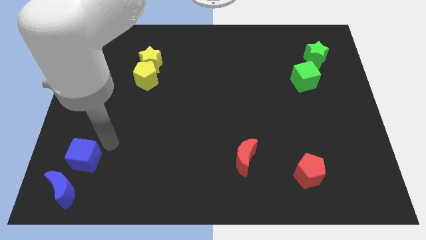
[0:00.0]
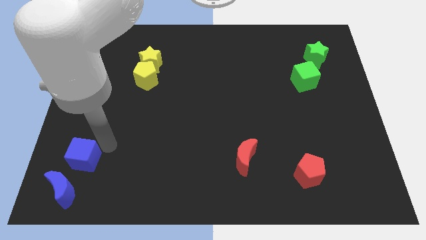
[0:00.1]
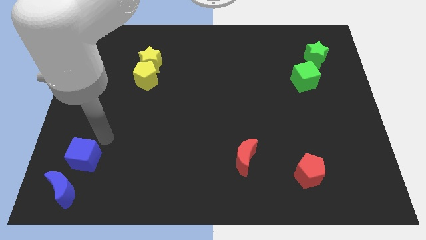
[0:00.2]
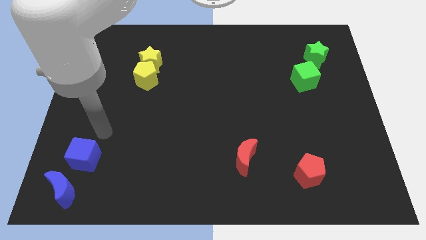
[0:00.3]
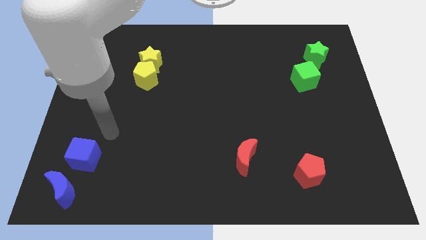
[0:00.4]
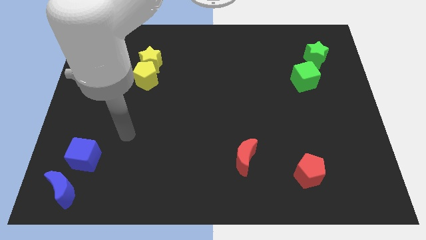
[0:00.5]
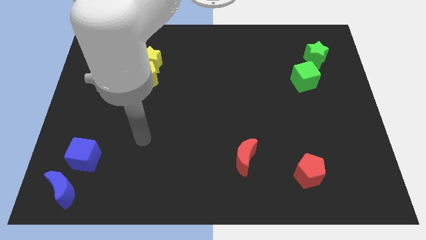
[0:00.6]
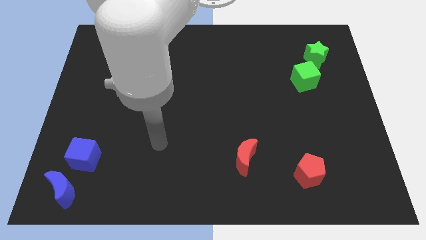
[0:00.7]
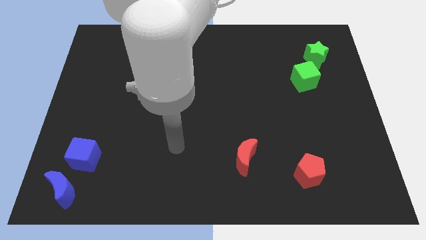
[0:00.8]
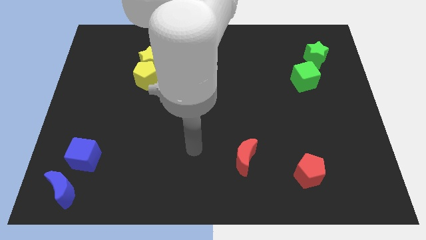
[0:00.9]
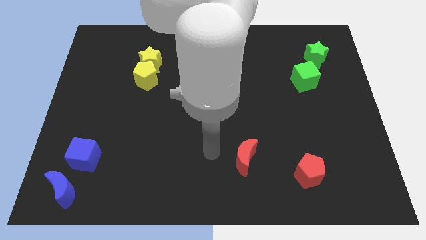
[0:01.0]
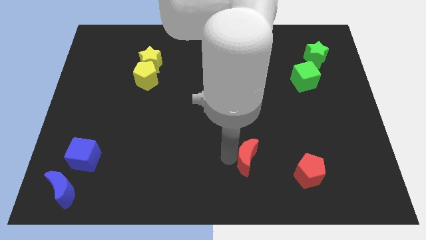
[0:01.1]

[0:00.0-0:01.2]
move your arm down and to the right

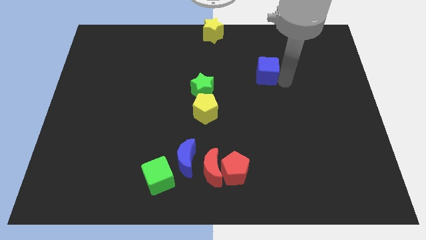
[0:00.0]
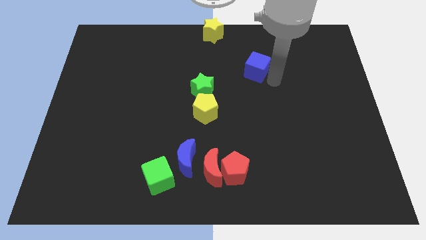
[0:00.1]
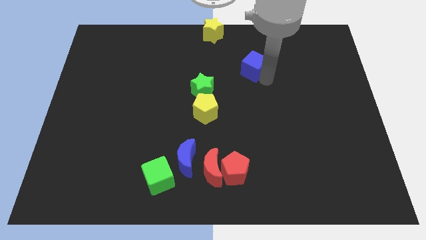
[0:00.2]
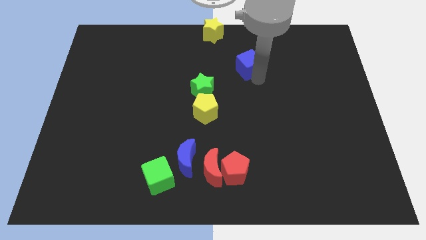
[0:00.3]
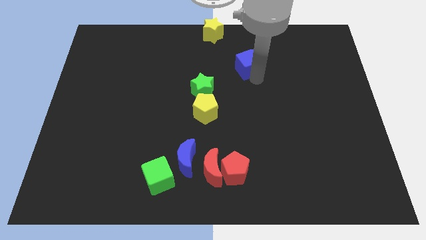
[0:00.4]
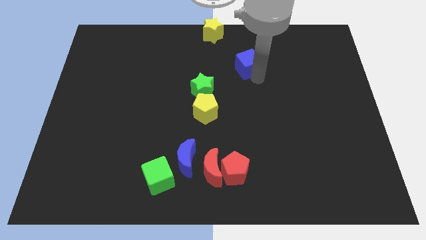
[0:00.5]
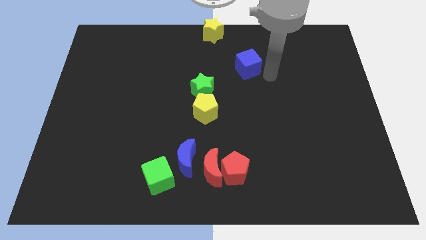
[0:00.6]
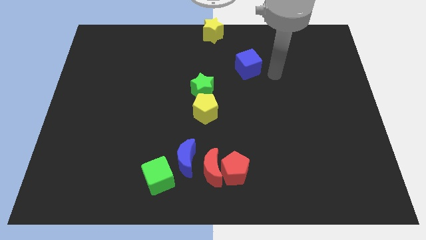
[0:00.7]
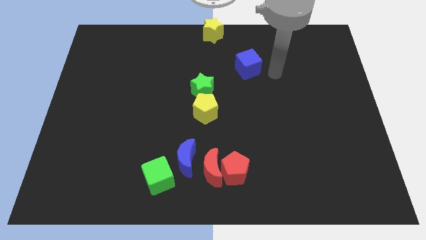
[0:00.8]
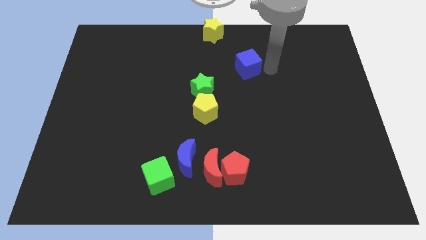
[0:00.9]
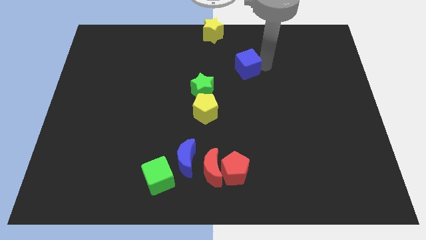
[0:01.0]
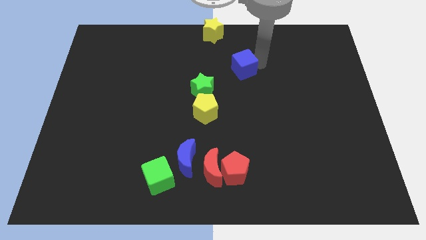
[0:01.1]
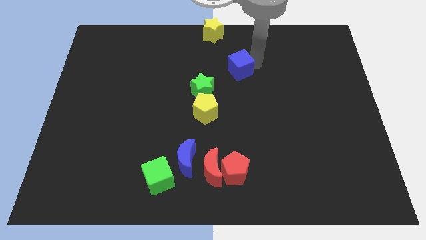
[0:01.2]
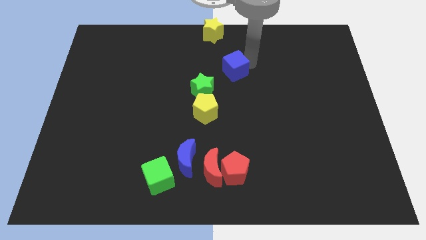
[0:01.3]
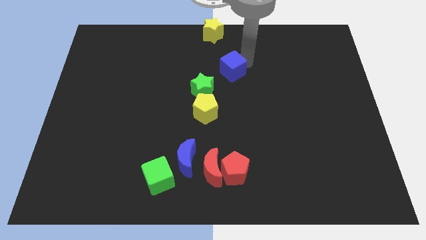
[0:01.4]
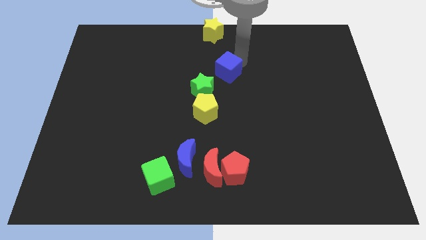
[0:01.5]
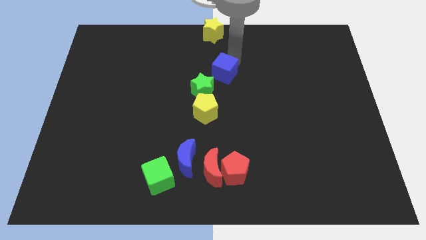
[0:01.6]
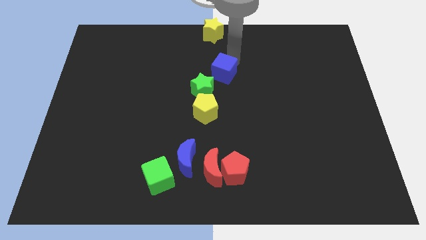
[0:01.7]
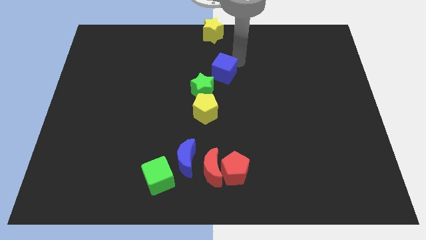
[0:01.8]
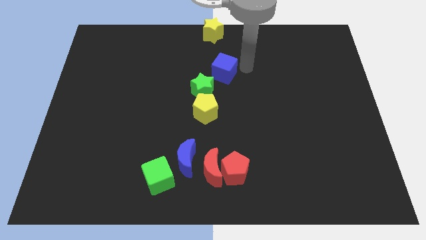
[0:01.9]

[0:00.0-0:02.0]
place the blue cube vertically below the yellow pentagon

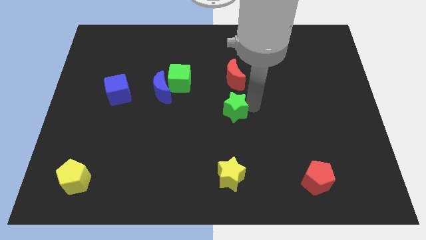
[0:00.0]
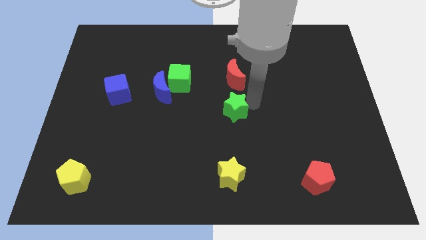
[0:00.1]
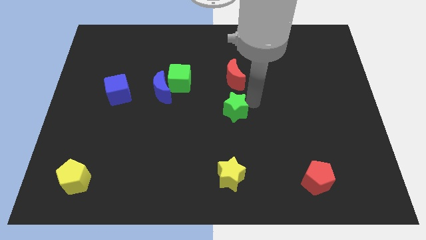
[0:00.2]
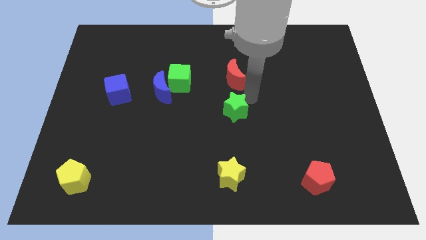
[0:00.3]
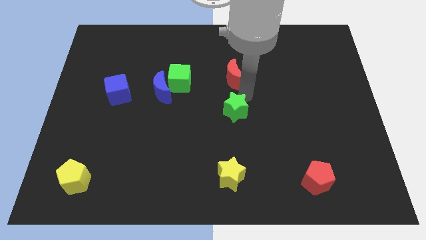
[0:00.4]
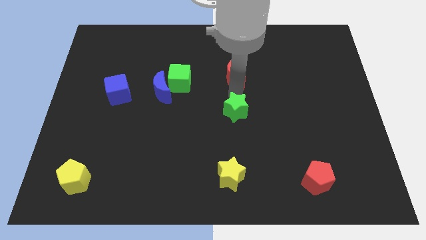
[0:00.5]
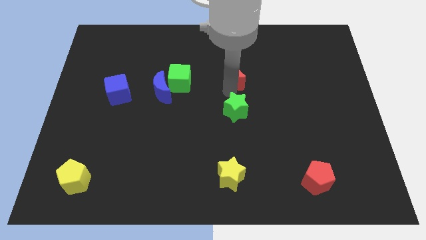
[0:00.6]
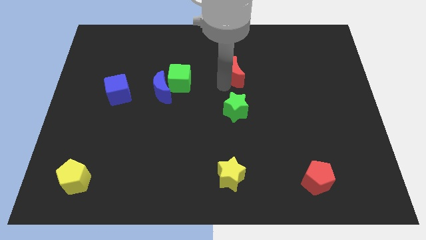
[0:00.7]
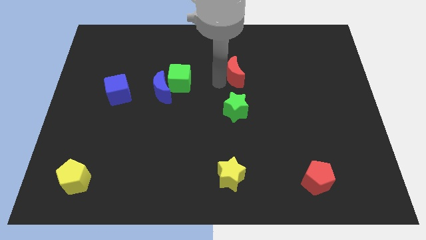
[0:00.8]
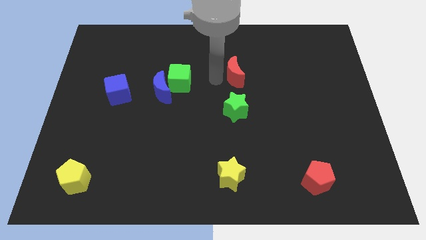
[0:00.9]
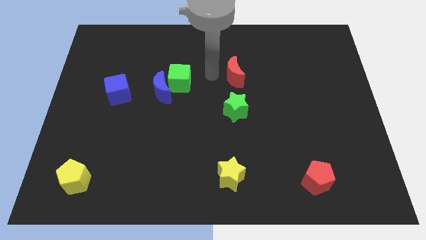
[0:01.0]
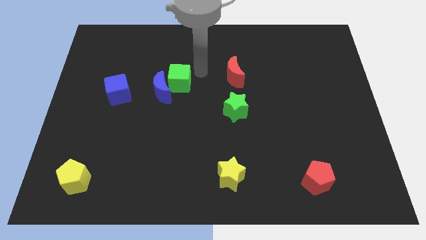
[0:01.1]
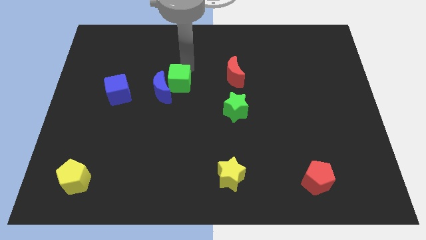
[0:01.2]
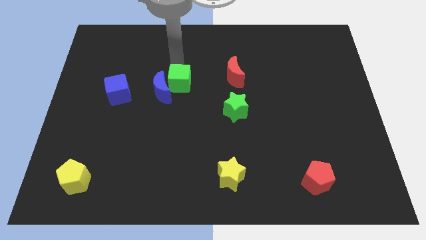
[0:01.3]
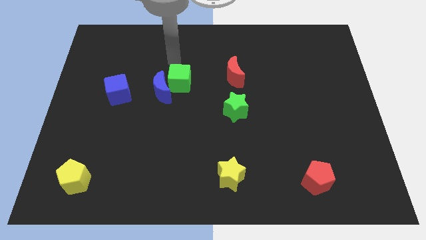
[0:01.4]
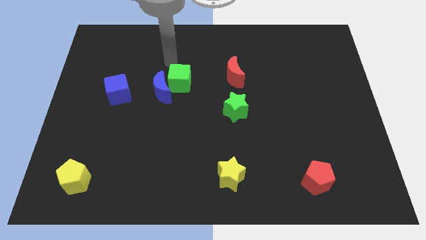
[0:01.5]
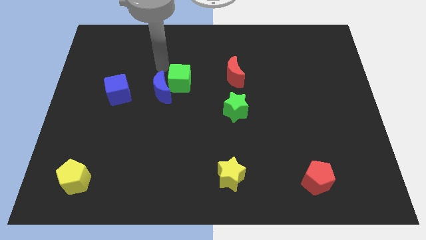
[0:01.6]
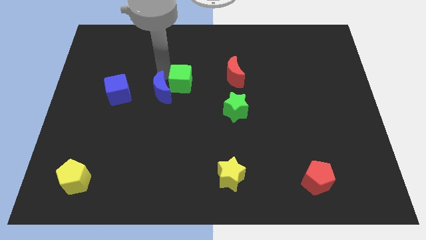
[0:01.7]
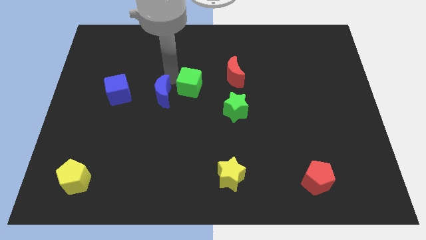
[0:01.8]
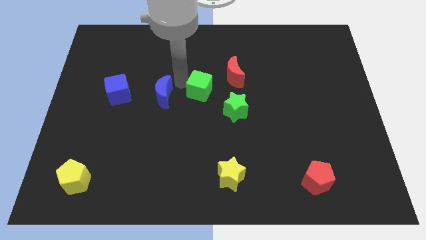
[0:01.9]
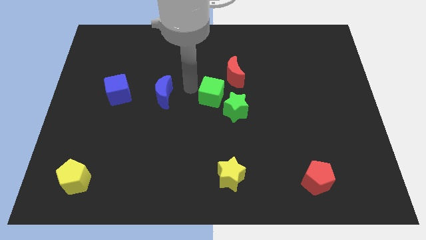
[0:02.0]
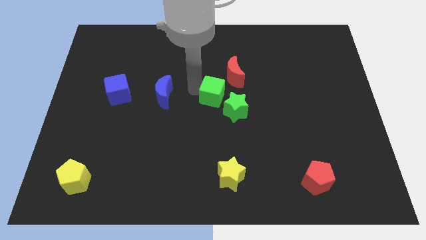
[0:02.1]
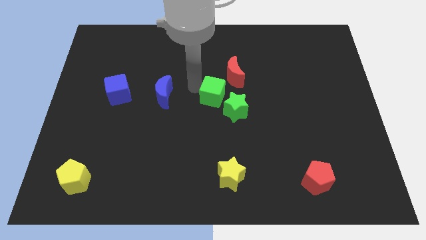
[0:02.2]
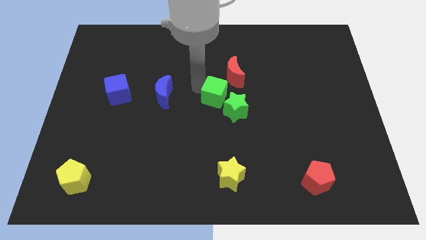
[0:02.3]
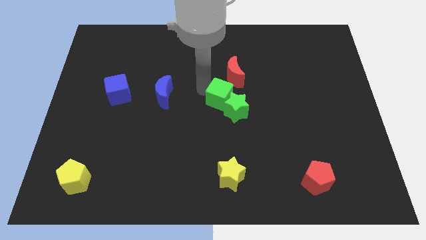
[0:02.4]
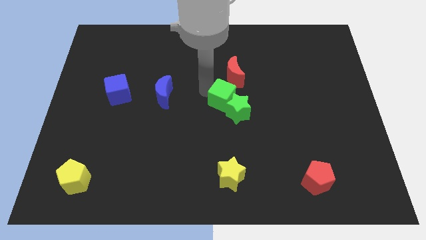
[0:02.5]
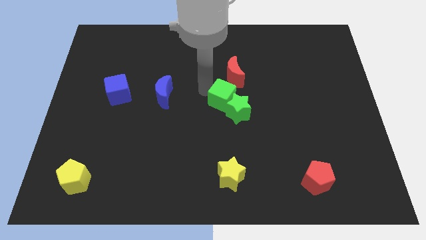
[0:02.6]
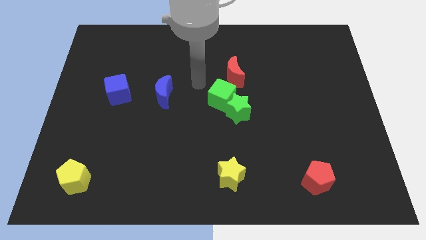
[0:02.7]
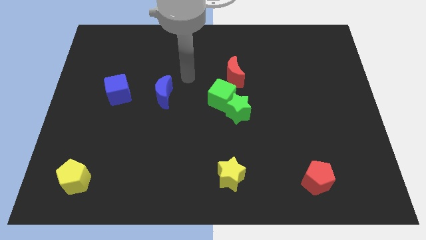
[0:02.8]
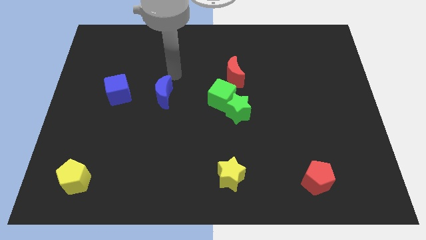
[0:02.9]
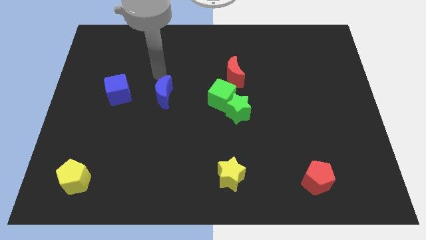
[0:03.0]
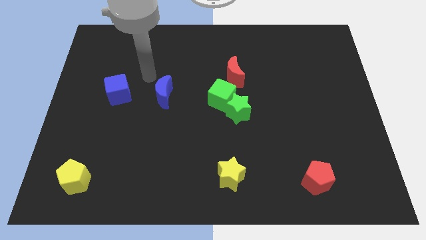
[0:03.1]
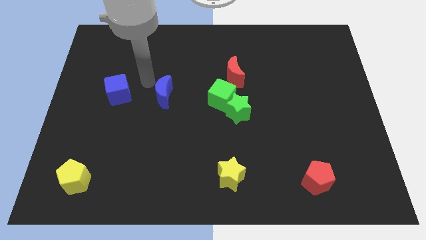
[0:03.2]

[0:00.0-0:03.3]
move the green cube into green star

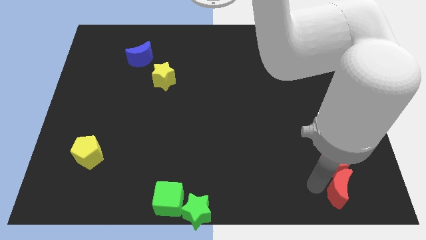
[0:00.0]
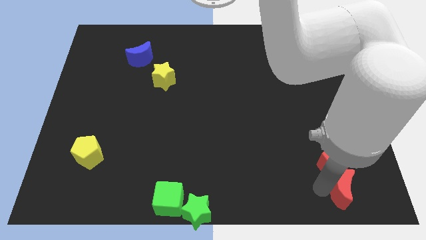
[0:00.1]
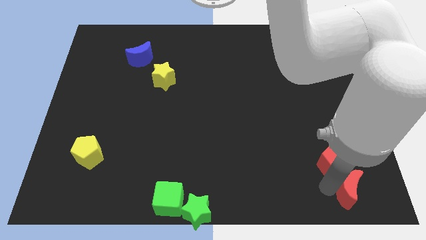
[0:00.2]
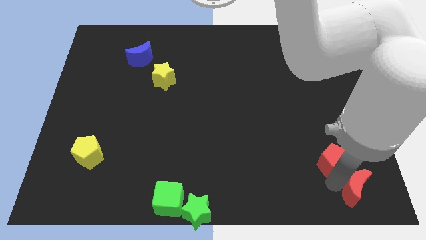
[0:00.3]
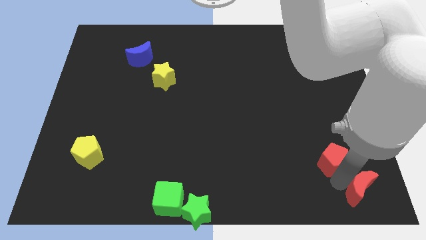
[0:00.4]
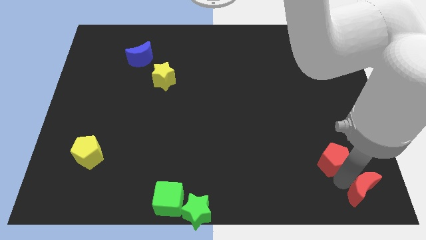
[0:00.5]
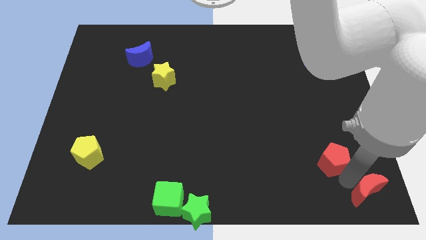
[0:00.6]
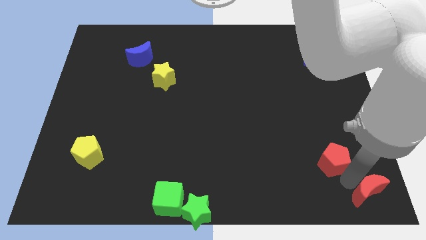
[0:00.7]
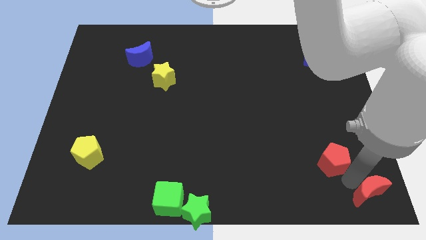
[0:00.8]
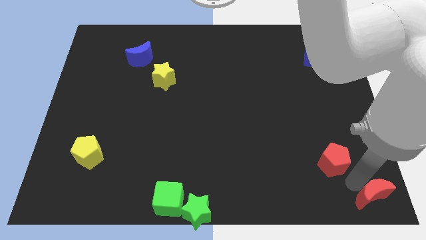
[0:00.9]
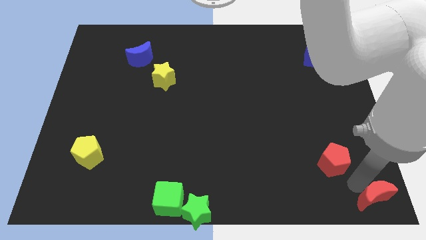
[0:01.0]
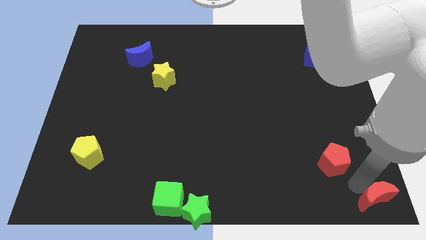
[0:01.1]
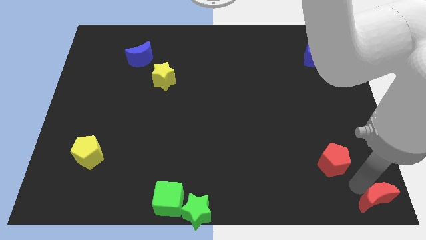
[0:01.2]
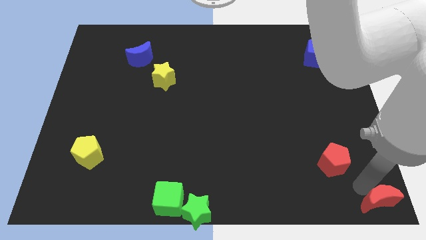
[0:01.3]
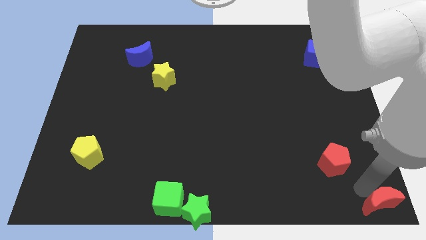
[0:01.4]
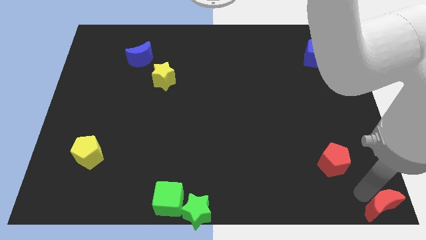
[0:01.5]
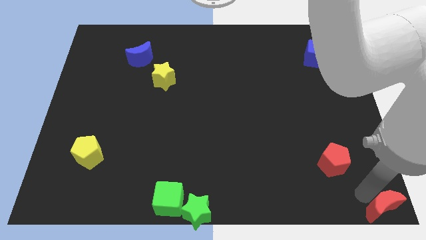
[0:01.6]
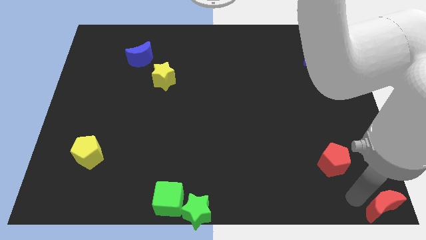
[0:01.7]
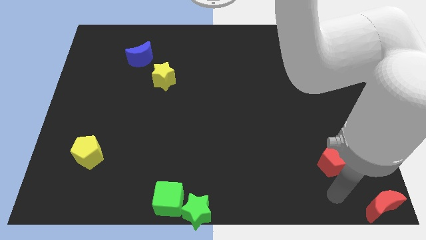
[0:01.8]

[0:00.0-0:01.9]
place the red crescent at the bottom right corner of the board

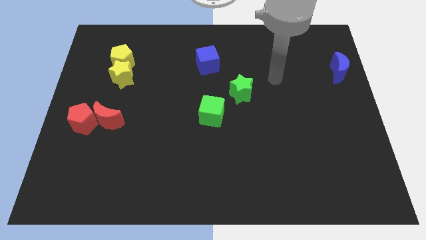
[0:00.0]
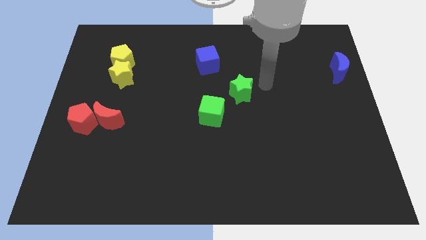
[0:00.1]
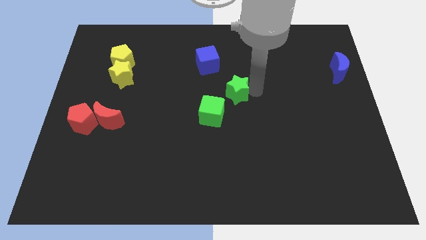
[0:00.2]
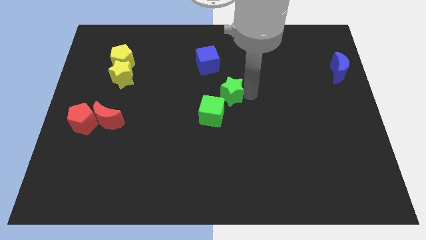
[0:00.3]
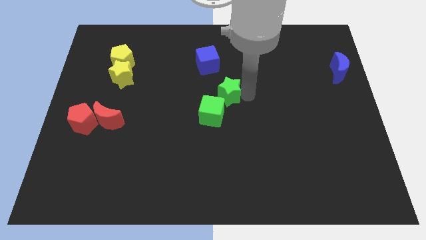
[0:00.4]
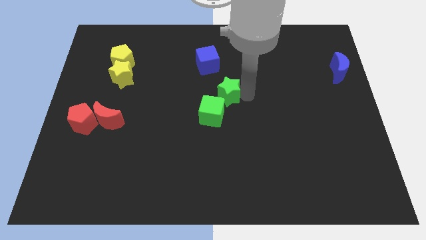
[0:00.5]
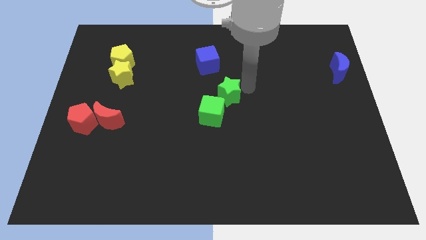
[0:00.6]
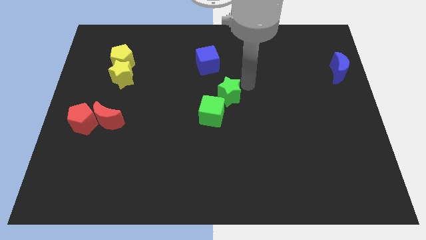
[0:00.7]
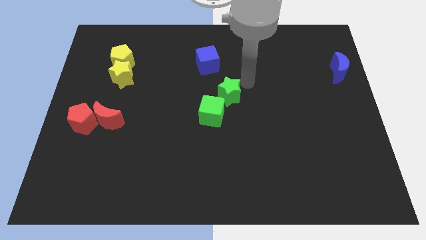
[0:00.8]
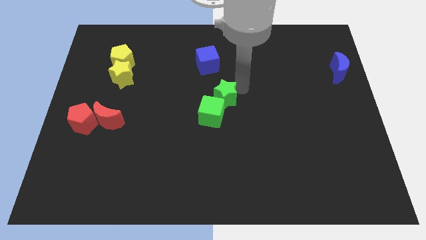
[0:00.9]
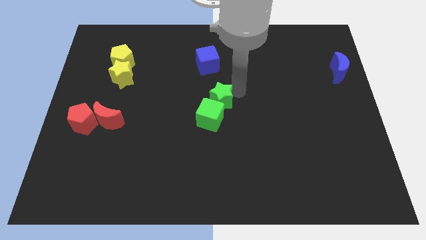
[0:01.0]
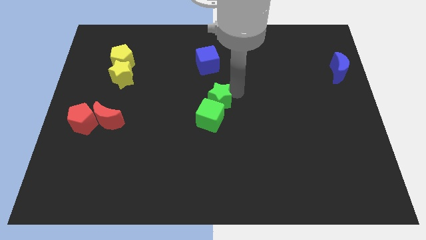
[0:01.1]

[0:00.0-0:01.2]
move the green star into the green cube
